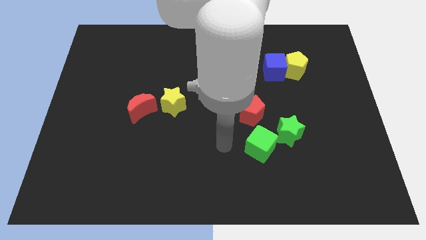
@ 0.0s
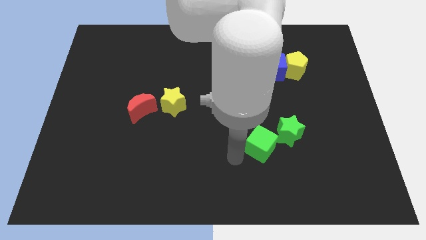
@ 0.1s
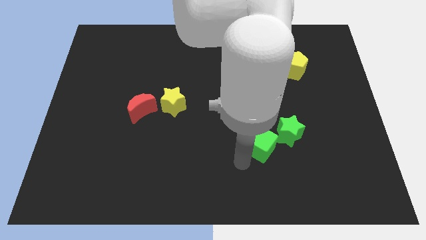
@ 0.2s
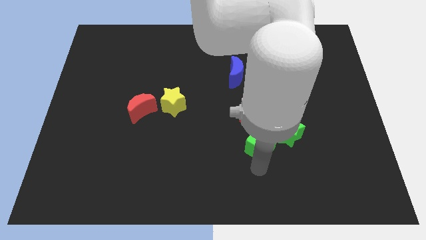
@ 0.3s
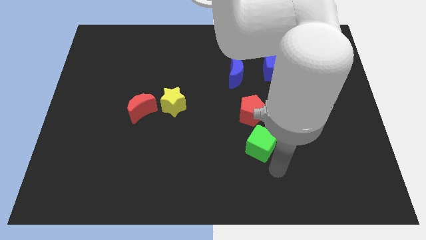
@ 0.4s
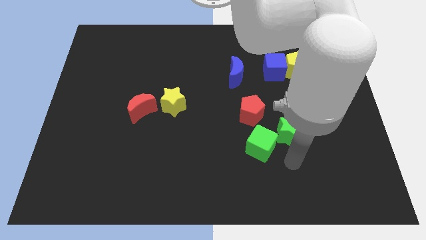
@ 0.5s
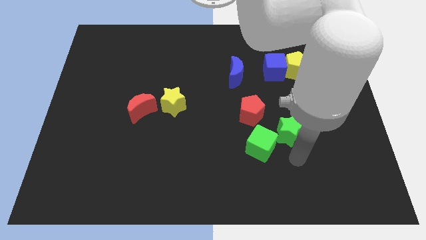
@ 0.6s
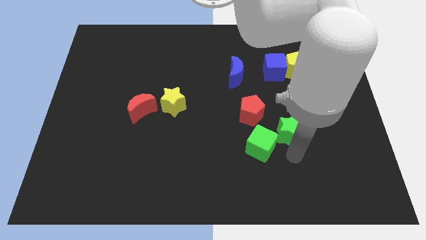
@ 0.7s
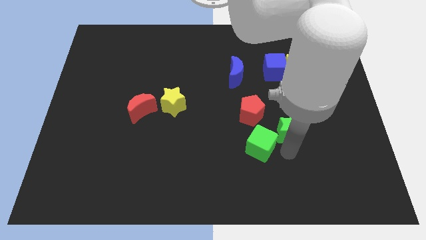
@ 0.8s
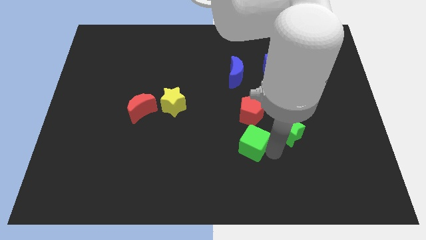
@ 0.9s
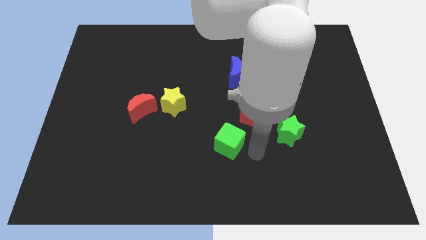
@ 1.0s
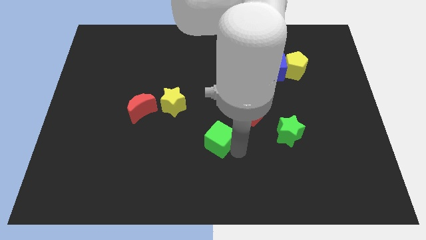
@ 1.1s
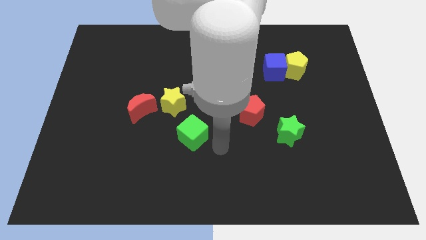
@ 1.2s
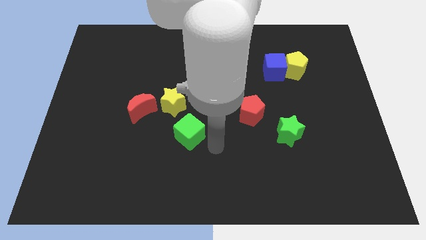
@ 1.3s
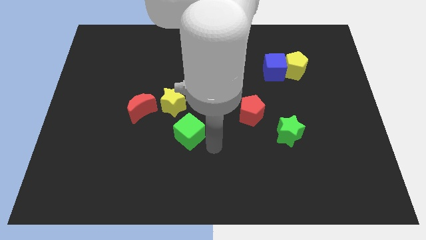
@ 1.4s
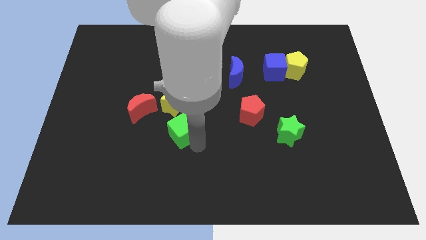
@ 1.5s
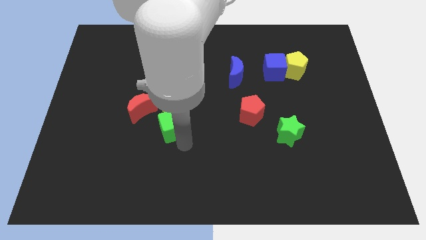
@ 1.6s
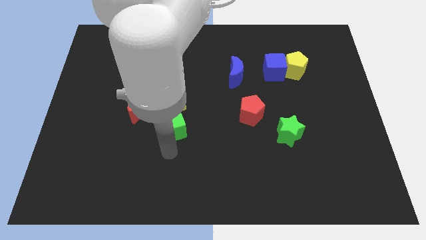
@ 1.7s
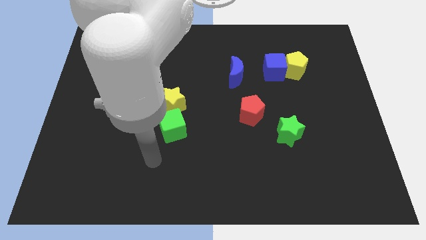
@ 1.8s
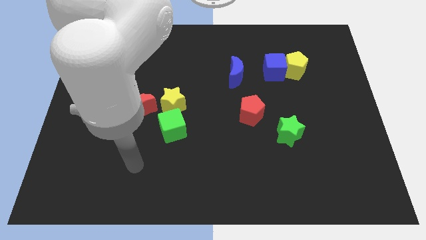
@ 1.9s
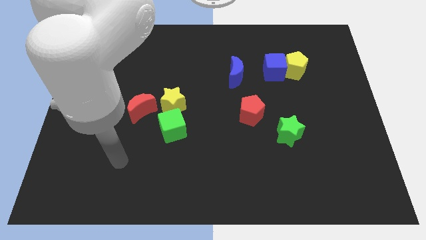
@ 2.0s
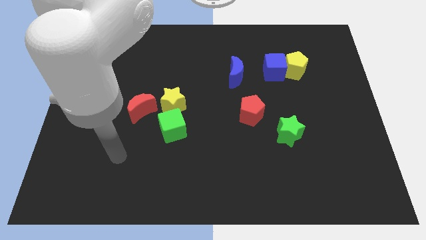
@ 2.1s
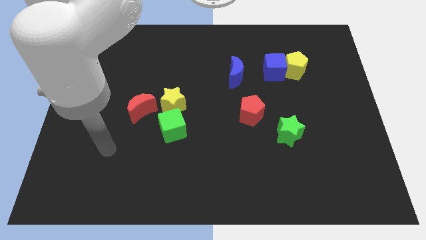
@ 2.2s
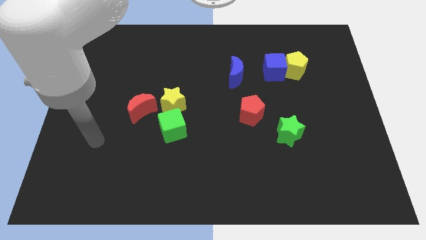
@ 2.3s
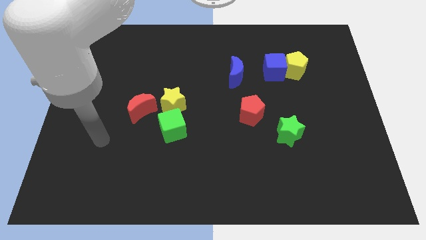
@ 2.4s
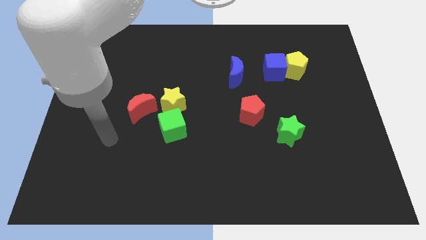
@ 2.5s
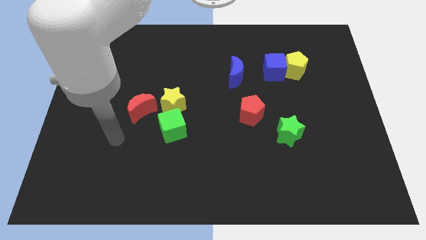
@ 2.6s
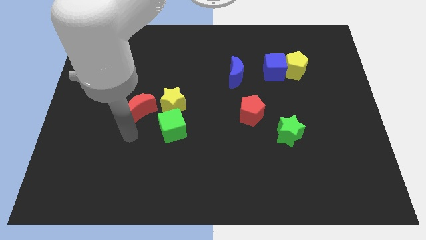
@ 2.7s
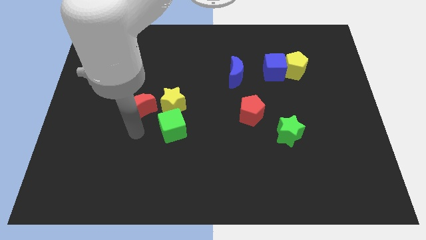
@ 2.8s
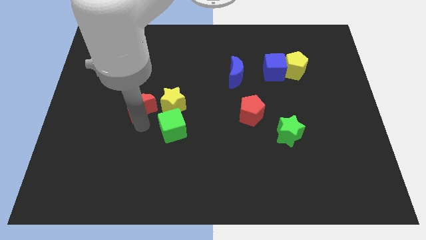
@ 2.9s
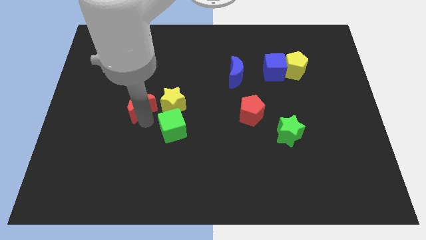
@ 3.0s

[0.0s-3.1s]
place the green cube at the bottom of the yellow star

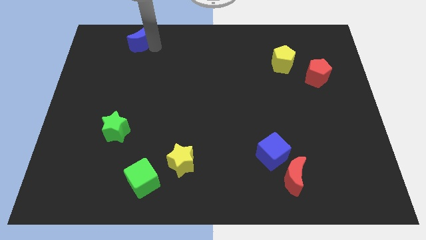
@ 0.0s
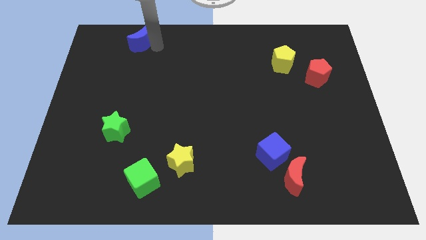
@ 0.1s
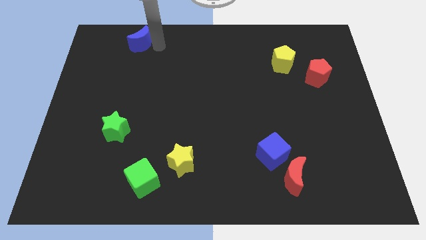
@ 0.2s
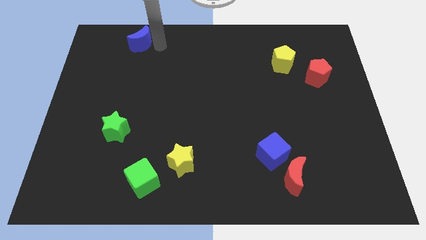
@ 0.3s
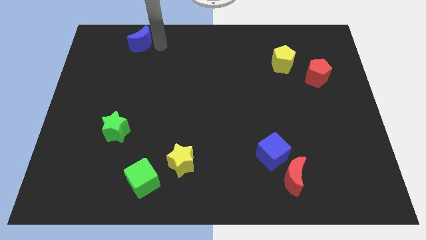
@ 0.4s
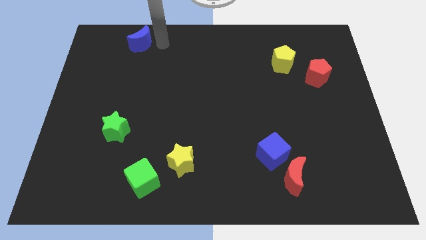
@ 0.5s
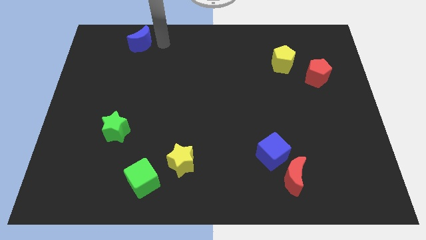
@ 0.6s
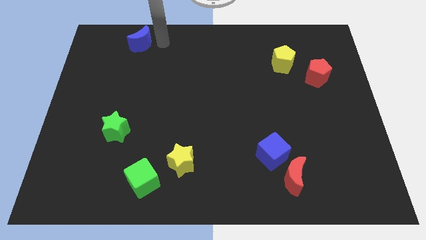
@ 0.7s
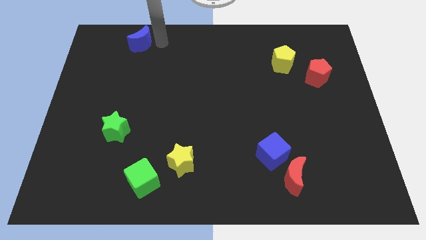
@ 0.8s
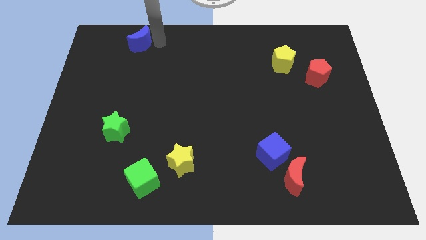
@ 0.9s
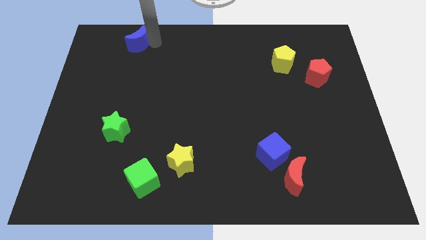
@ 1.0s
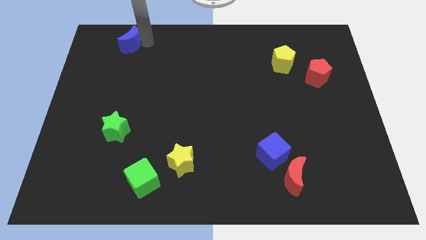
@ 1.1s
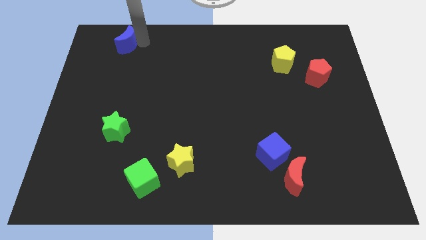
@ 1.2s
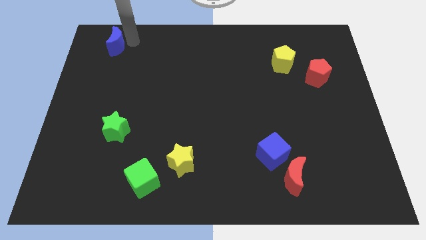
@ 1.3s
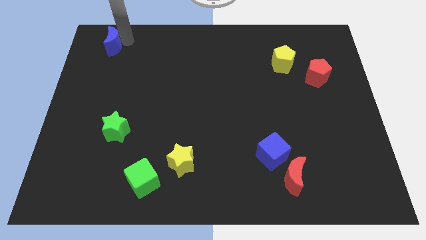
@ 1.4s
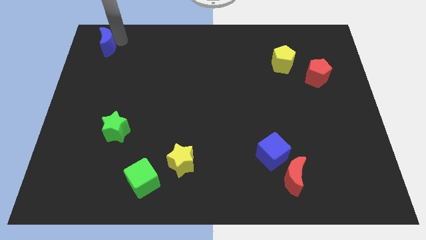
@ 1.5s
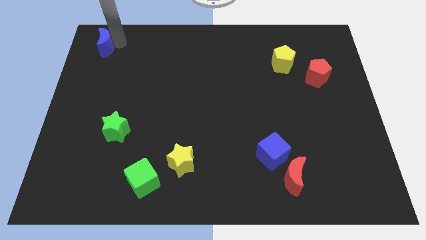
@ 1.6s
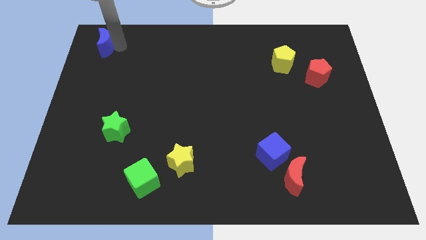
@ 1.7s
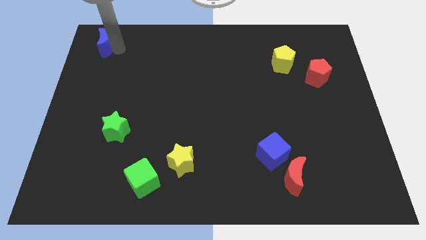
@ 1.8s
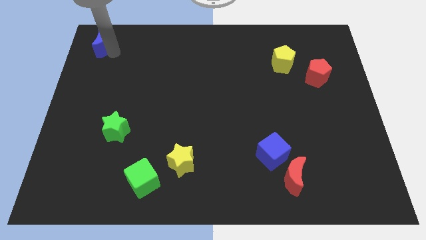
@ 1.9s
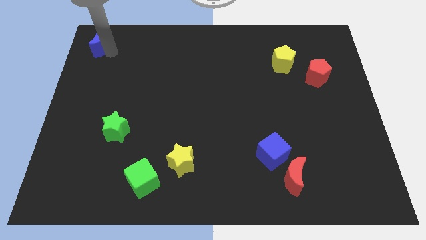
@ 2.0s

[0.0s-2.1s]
move the blue crescent to the top left corner

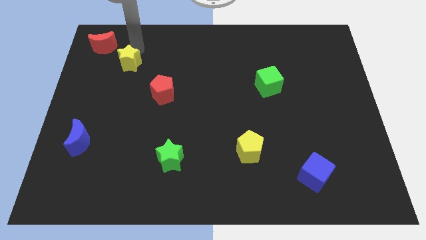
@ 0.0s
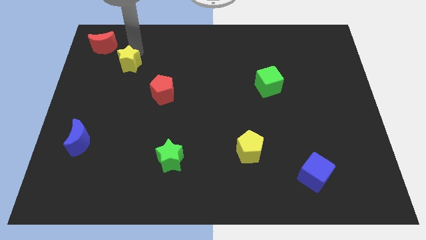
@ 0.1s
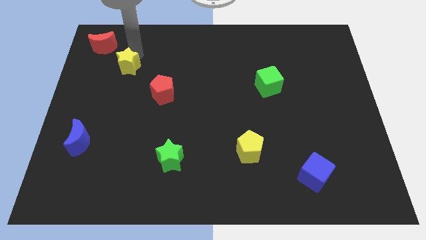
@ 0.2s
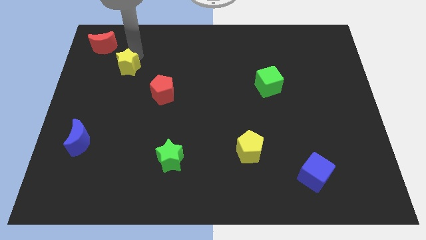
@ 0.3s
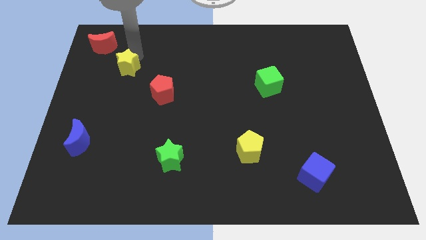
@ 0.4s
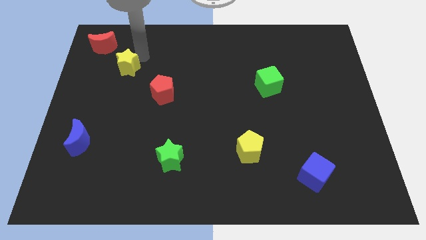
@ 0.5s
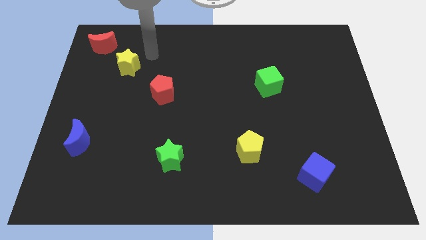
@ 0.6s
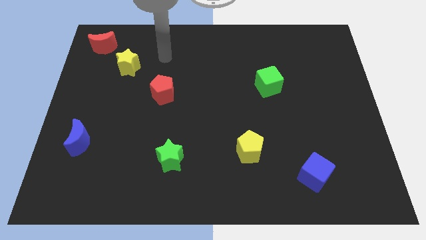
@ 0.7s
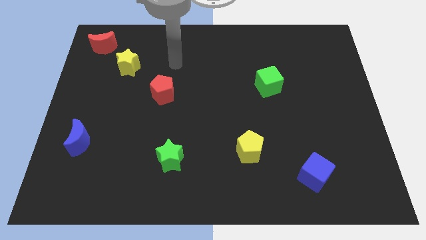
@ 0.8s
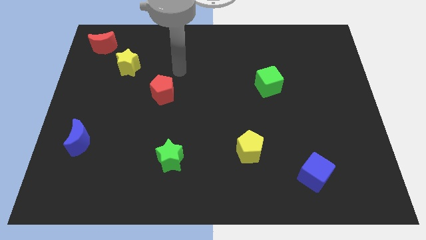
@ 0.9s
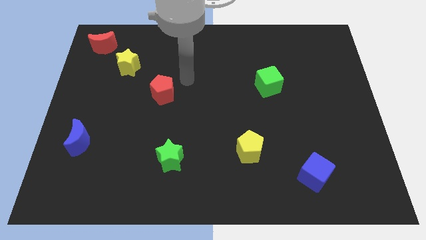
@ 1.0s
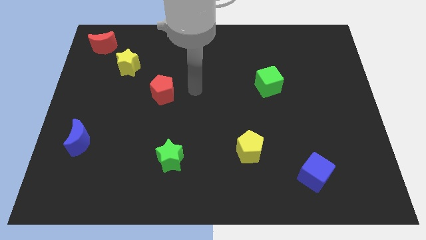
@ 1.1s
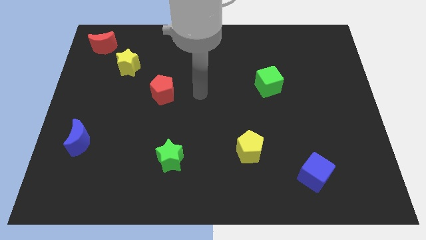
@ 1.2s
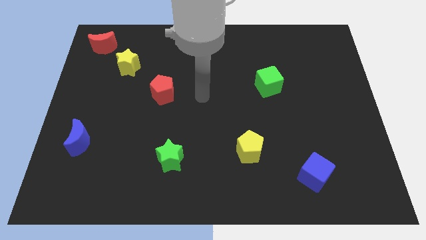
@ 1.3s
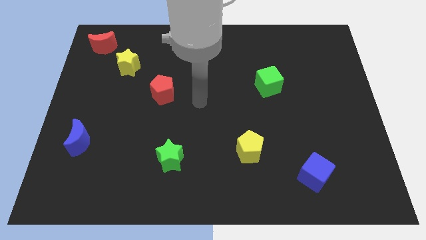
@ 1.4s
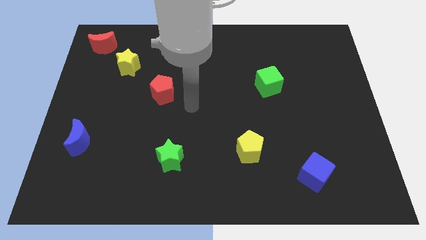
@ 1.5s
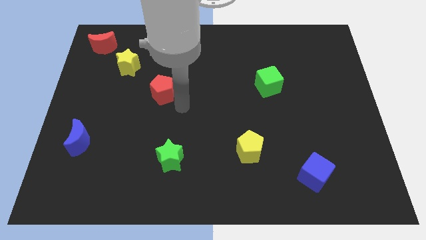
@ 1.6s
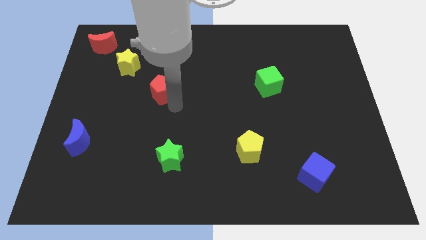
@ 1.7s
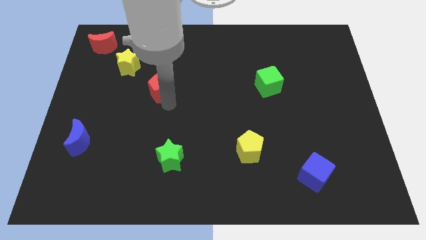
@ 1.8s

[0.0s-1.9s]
place your arm below red pentagon

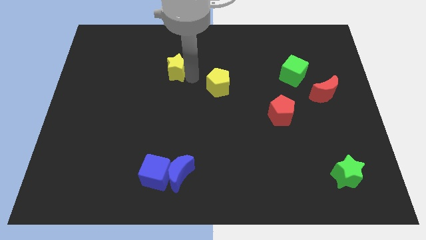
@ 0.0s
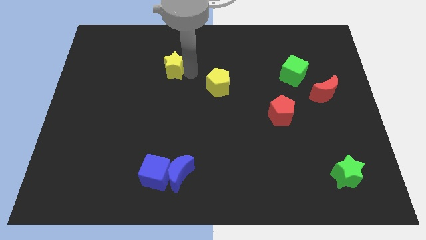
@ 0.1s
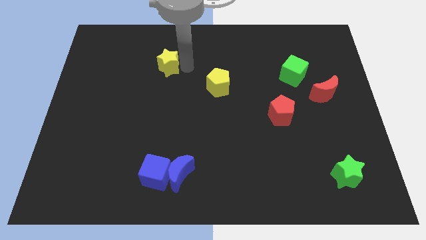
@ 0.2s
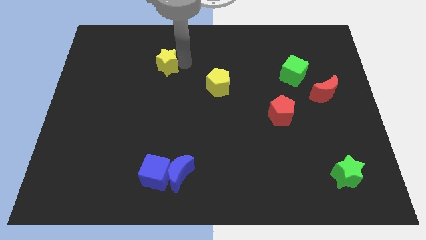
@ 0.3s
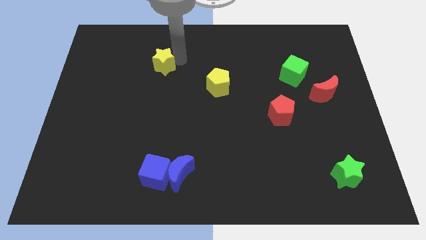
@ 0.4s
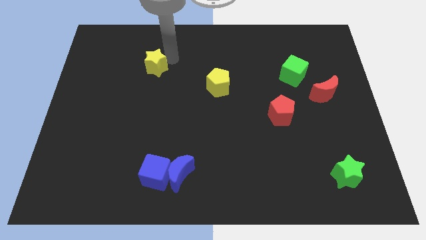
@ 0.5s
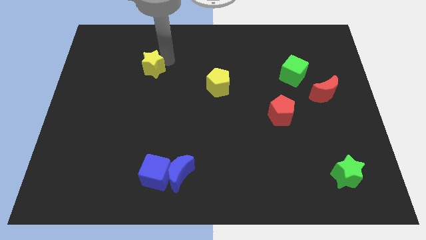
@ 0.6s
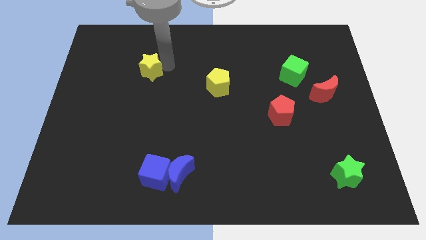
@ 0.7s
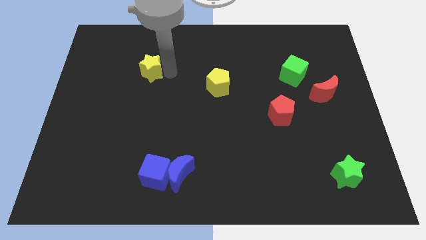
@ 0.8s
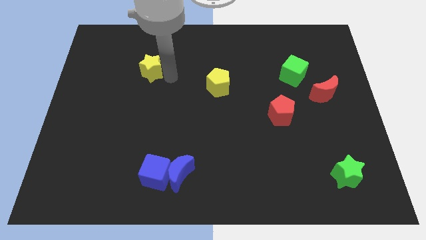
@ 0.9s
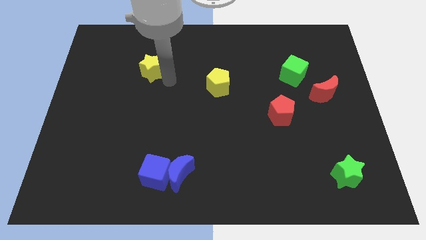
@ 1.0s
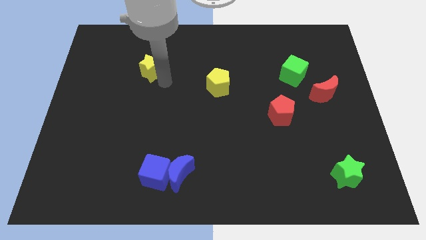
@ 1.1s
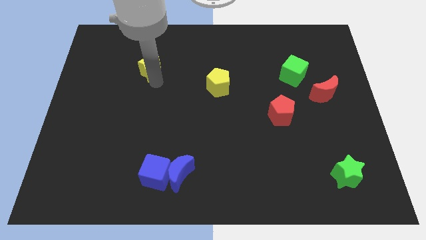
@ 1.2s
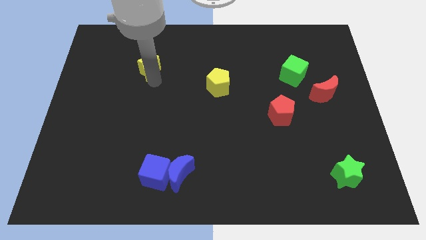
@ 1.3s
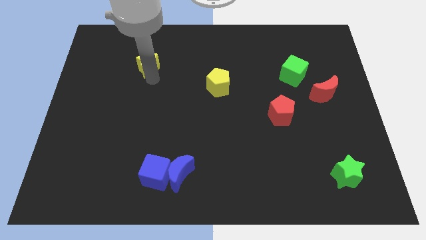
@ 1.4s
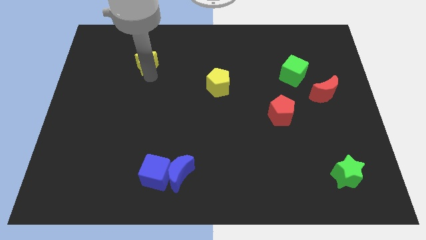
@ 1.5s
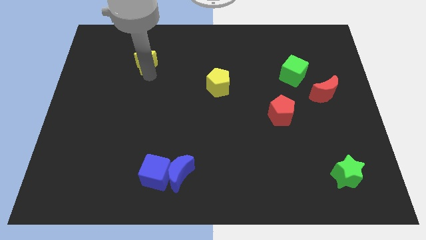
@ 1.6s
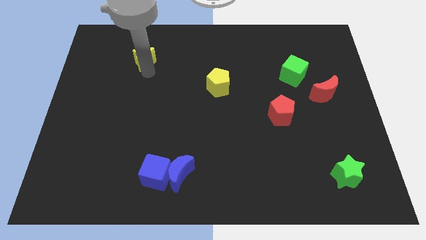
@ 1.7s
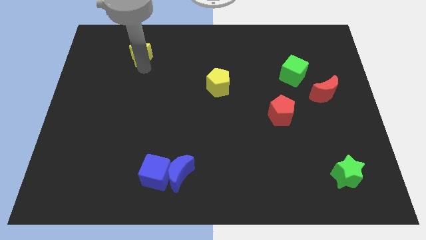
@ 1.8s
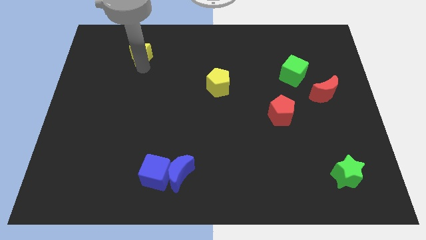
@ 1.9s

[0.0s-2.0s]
push the yellow star above the blue blocks
